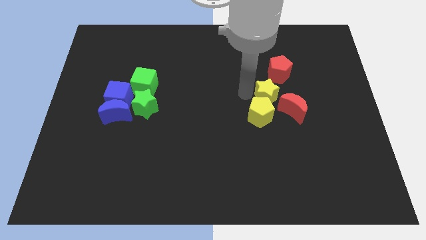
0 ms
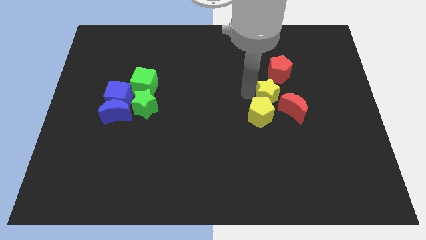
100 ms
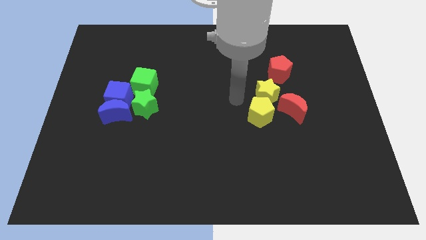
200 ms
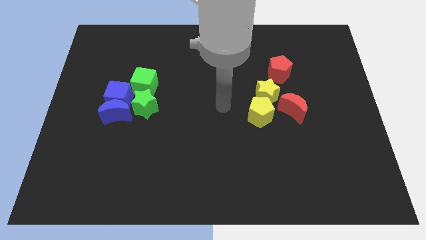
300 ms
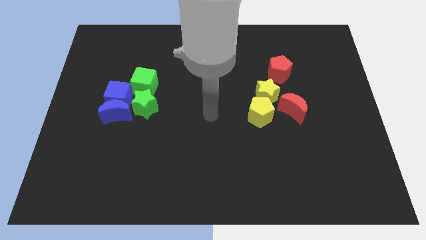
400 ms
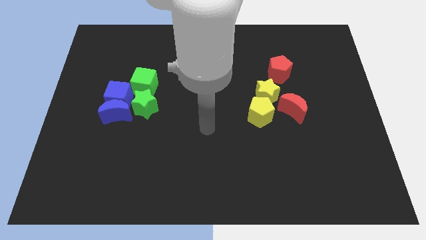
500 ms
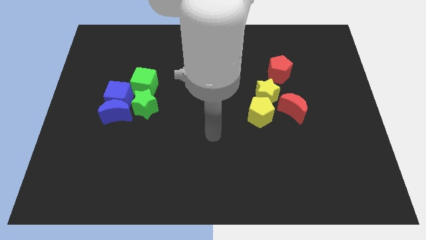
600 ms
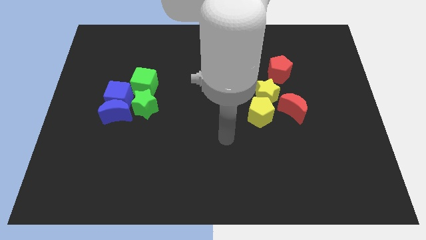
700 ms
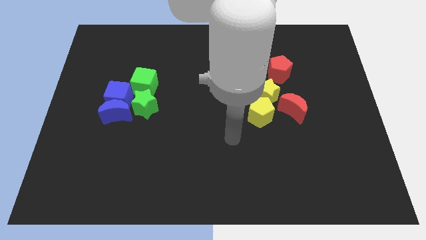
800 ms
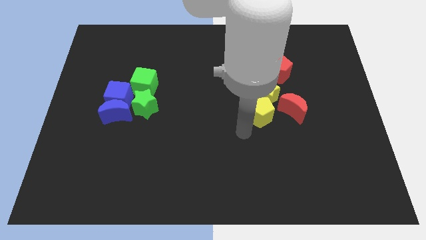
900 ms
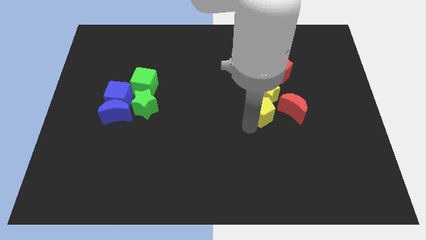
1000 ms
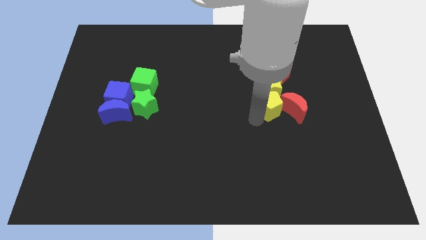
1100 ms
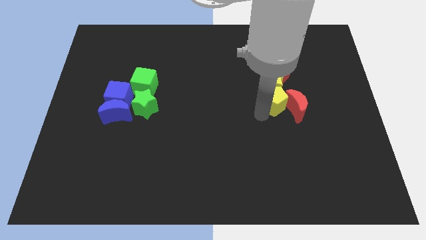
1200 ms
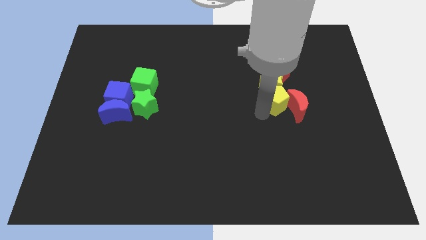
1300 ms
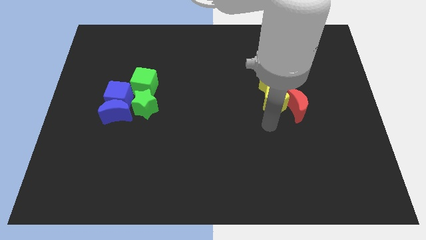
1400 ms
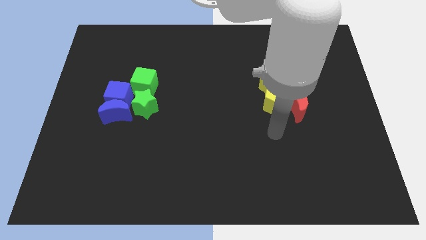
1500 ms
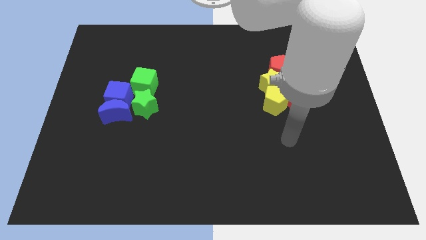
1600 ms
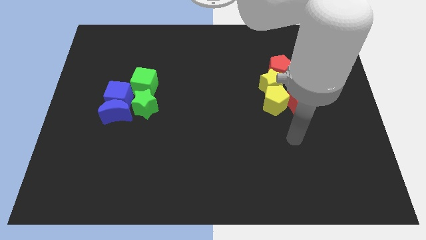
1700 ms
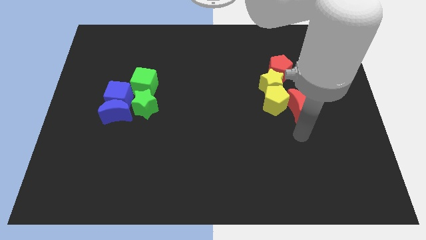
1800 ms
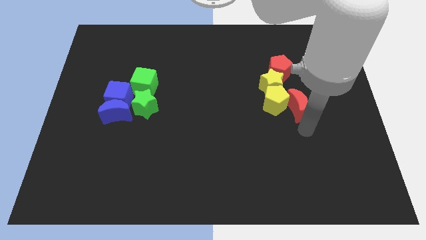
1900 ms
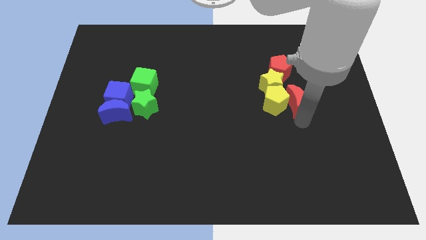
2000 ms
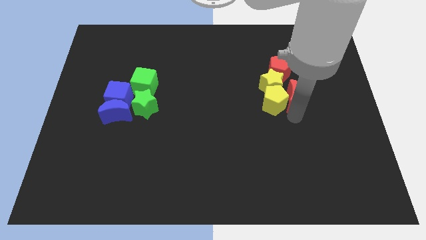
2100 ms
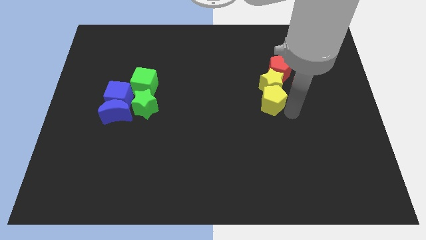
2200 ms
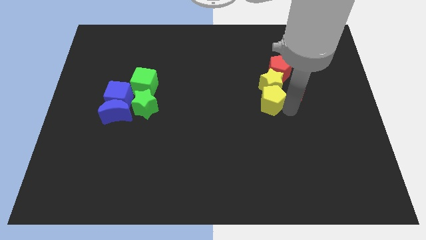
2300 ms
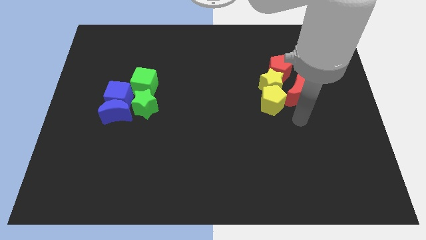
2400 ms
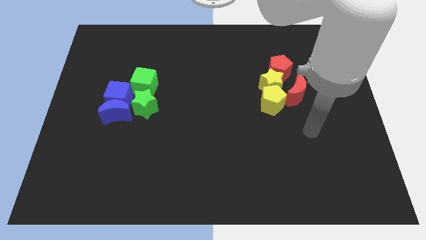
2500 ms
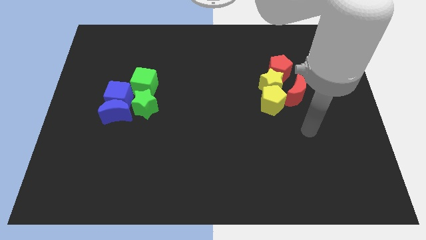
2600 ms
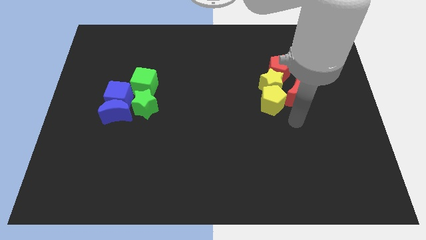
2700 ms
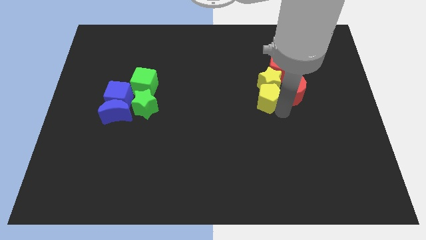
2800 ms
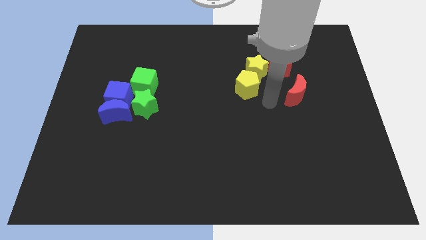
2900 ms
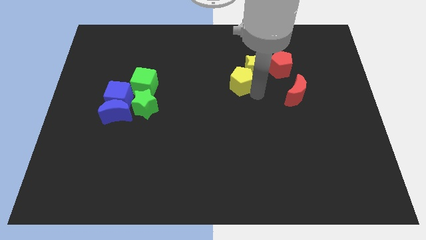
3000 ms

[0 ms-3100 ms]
push the yellow star with the yellow pentagon

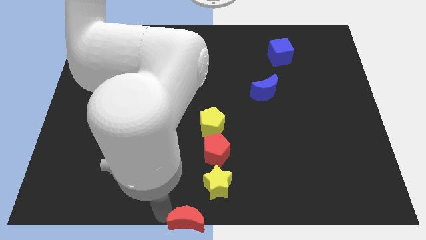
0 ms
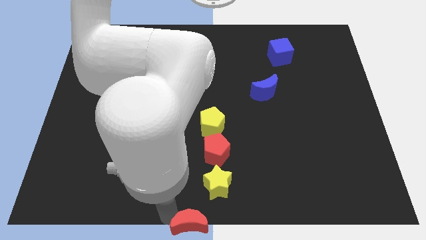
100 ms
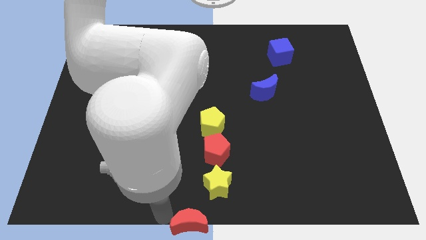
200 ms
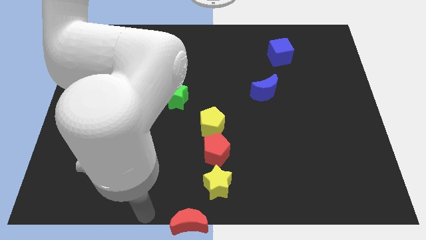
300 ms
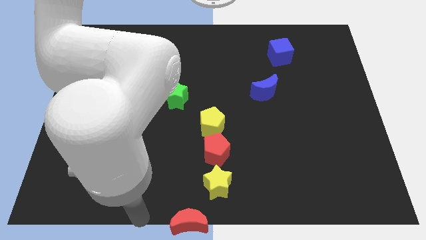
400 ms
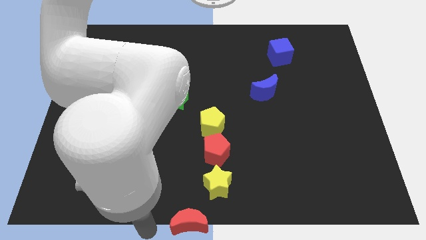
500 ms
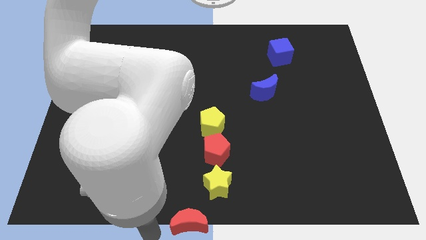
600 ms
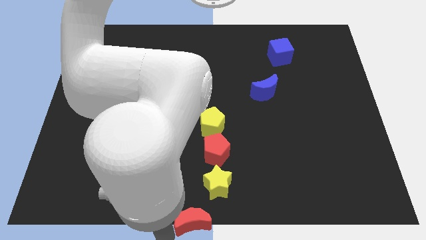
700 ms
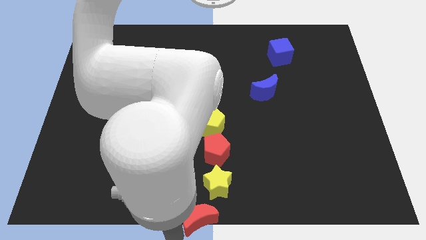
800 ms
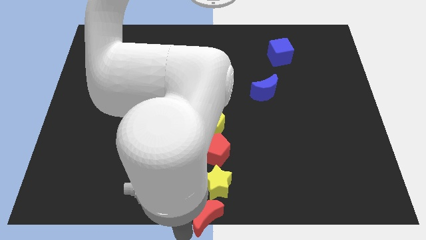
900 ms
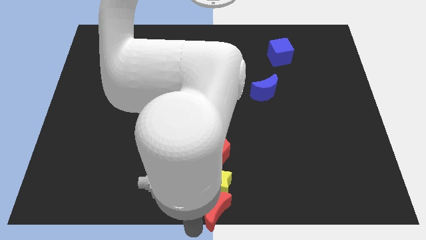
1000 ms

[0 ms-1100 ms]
place the red moon at the bottom center of the board

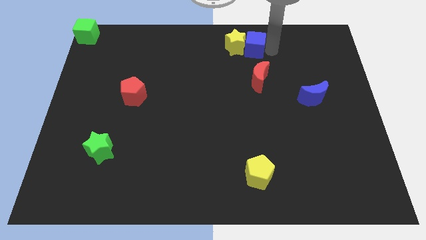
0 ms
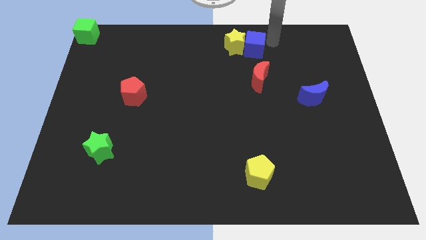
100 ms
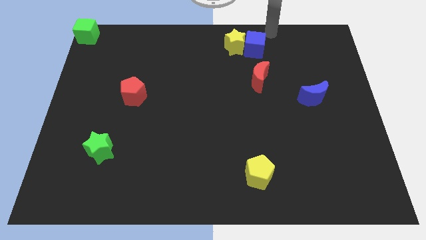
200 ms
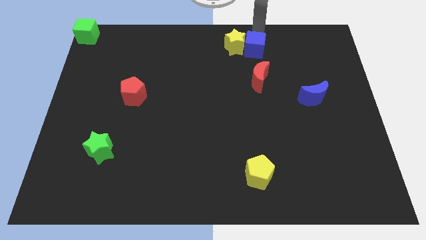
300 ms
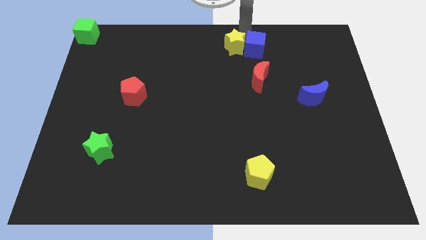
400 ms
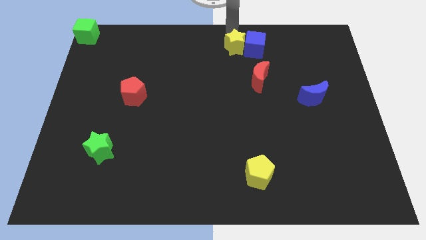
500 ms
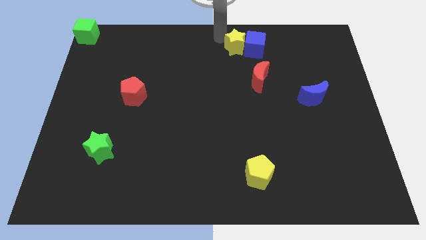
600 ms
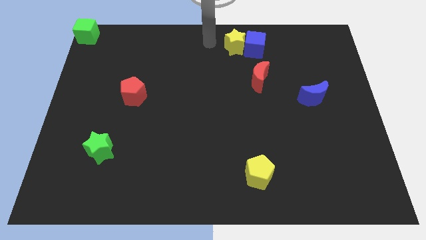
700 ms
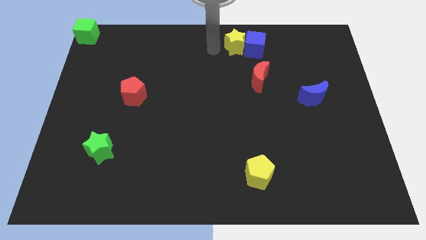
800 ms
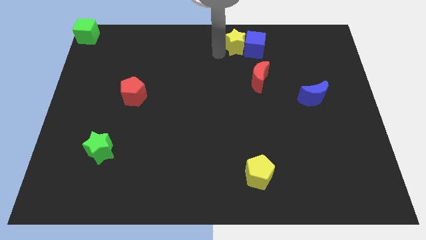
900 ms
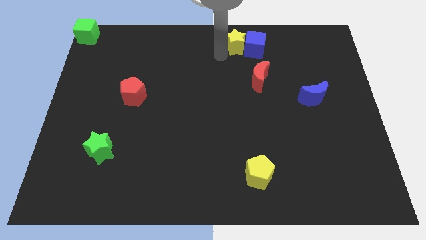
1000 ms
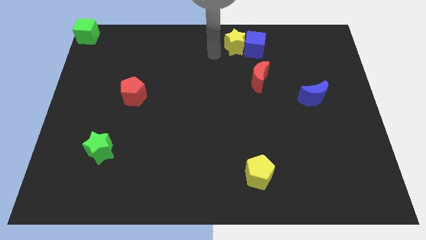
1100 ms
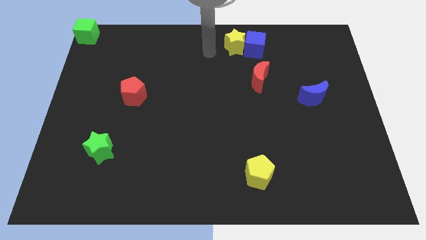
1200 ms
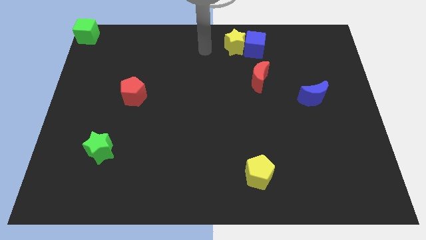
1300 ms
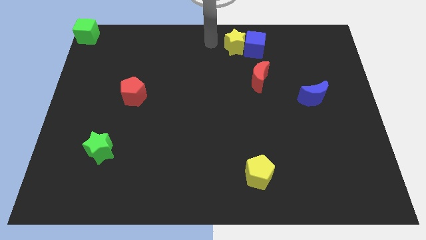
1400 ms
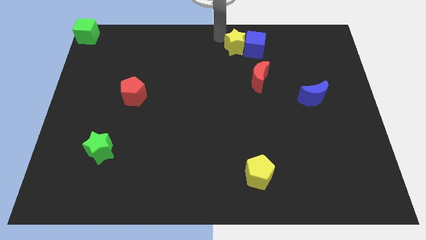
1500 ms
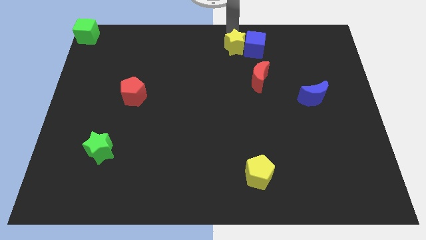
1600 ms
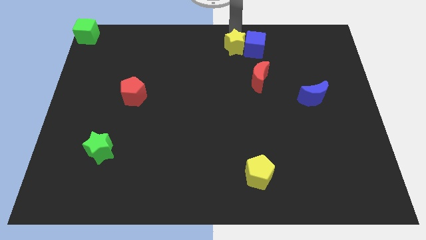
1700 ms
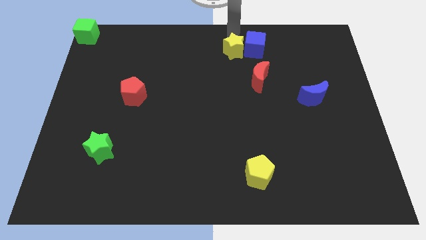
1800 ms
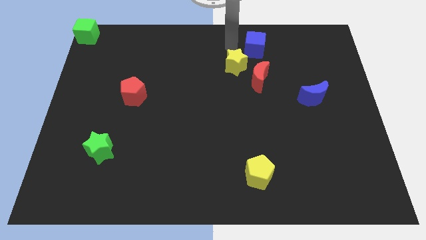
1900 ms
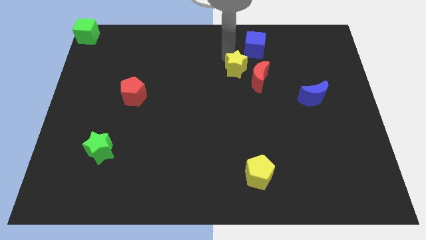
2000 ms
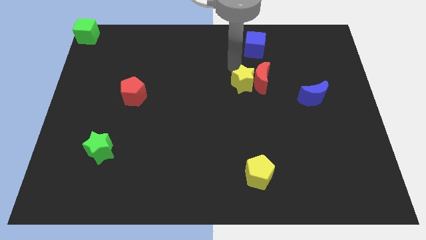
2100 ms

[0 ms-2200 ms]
separate the yellow star from the blue cube

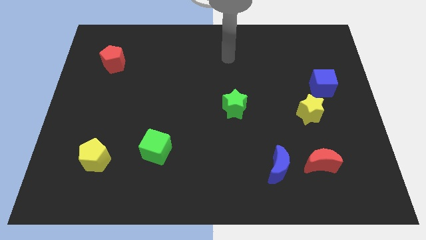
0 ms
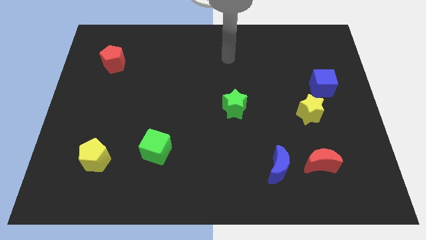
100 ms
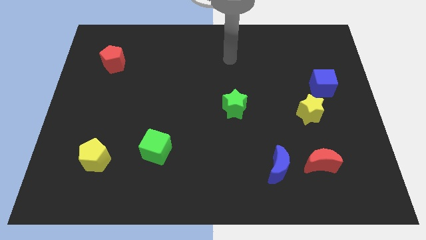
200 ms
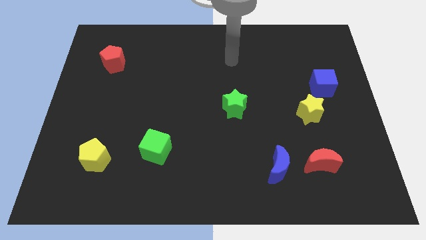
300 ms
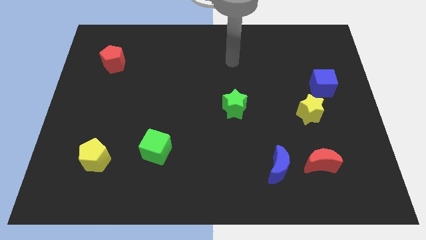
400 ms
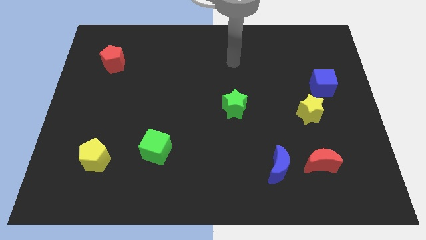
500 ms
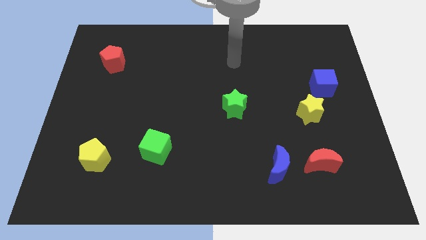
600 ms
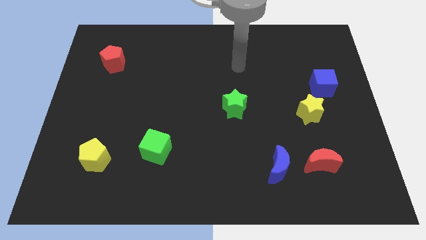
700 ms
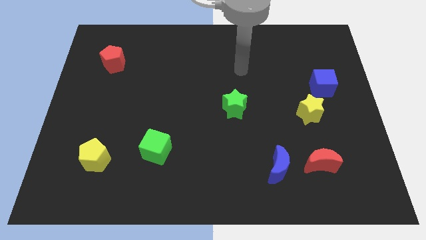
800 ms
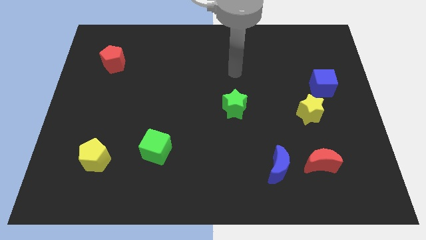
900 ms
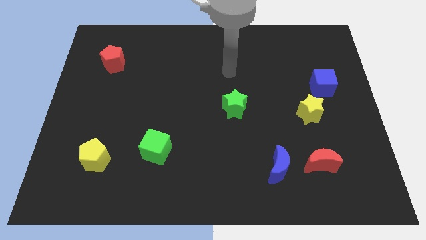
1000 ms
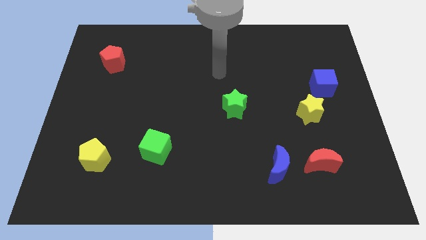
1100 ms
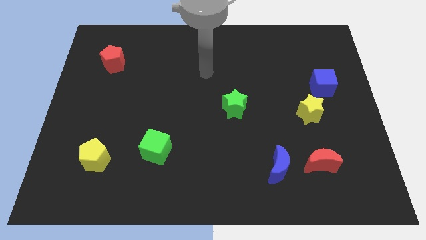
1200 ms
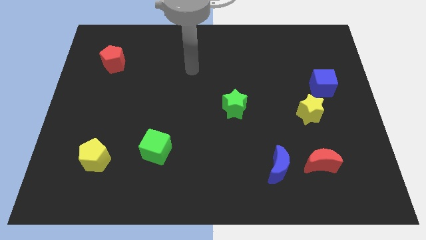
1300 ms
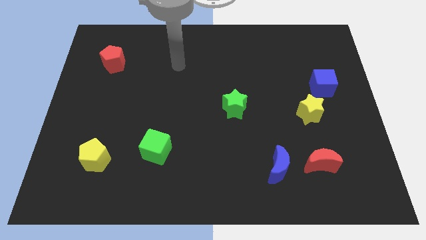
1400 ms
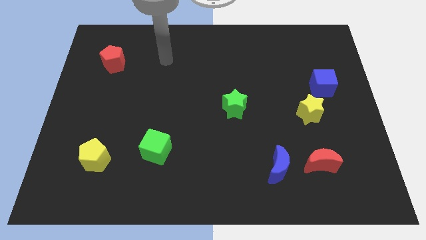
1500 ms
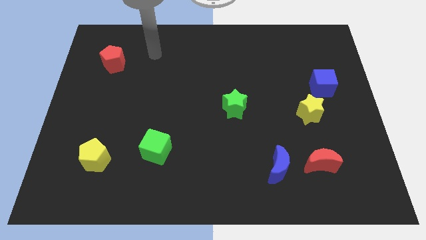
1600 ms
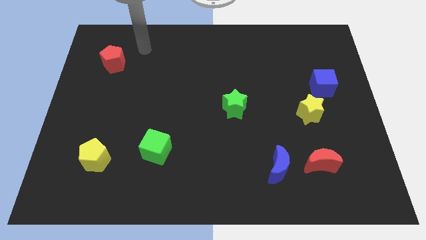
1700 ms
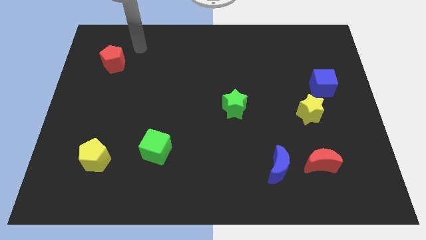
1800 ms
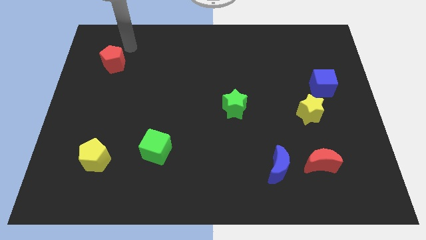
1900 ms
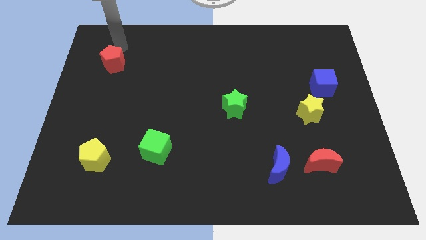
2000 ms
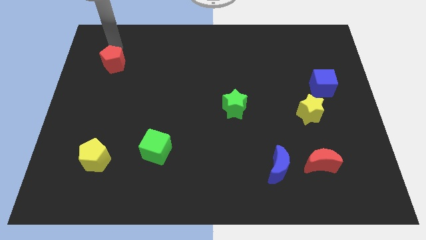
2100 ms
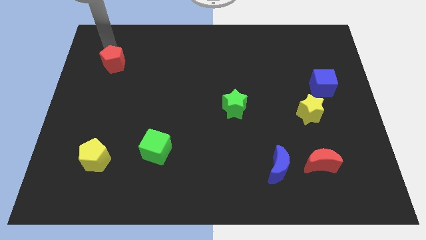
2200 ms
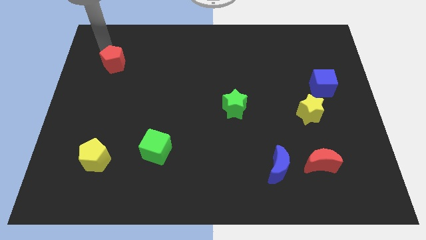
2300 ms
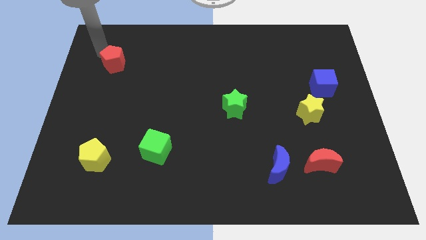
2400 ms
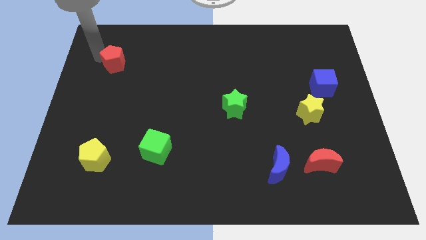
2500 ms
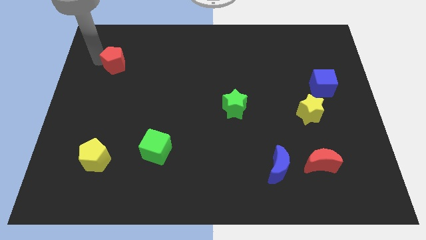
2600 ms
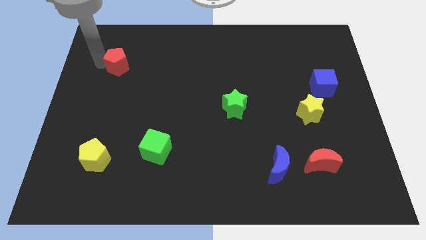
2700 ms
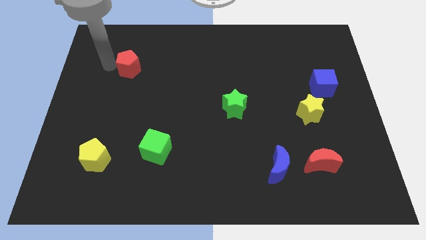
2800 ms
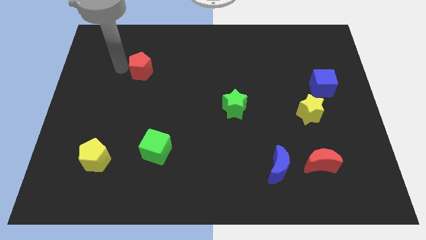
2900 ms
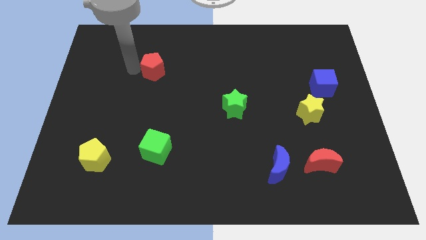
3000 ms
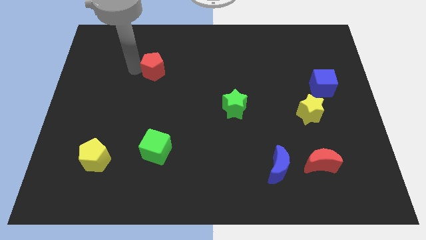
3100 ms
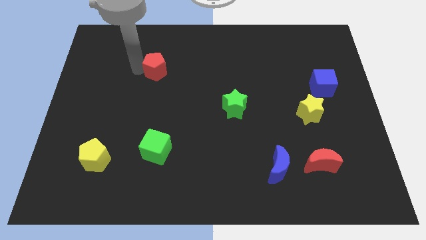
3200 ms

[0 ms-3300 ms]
move the red pentagon vertically to the top side of the green cube
